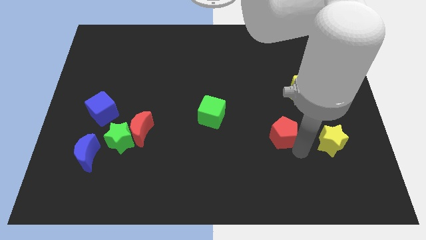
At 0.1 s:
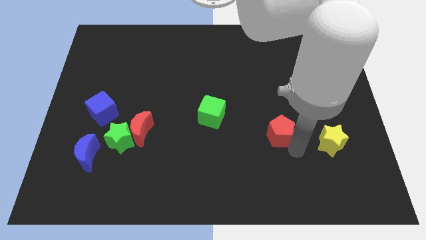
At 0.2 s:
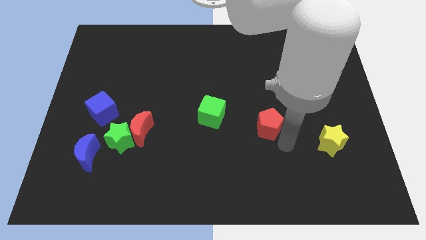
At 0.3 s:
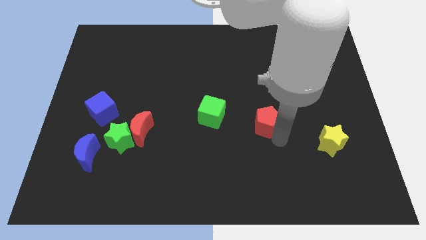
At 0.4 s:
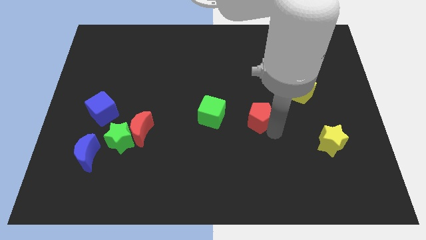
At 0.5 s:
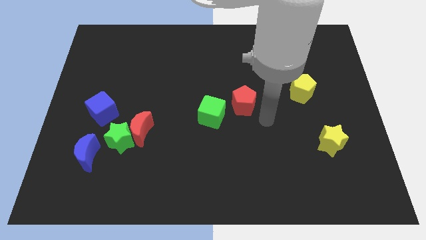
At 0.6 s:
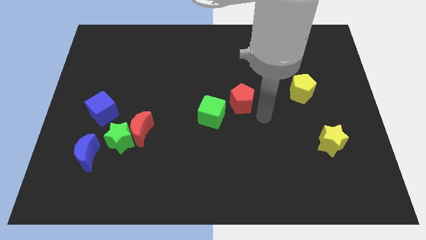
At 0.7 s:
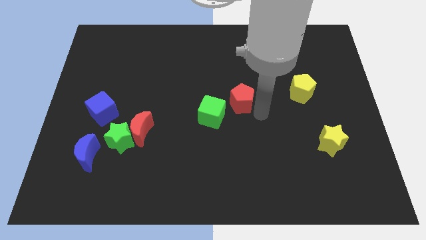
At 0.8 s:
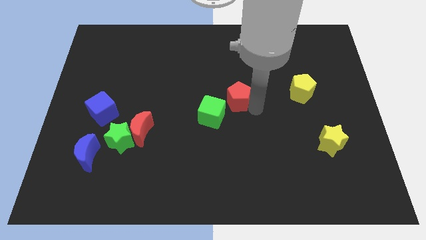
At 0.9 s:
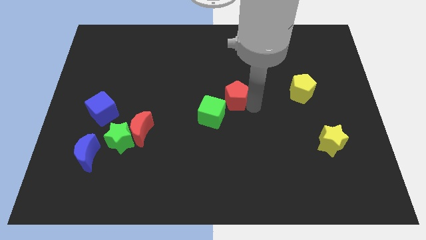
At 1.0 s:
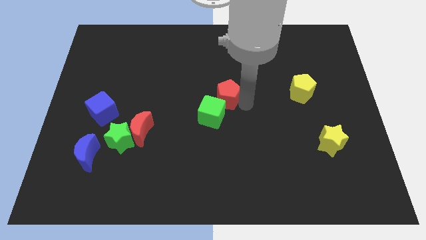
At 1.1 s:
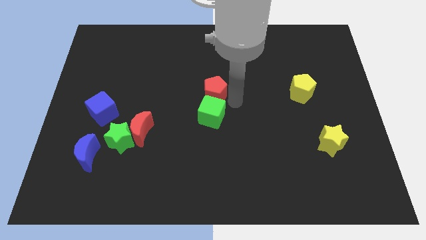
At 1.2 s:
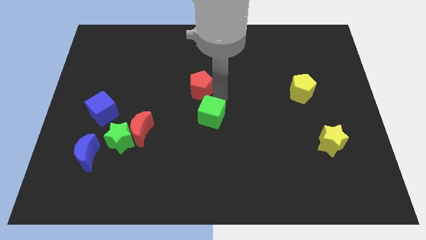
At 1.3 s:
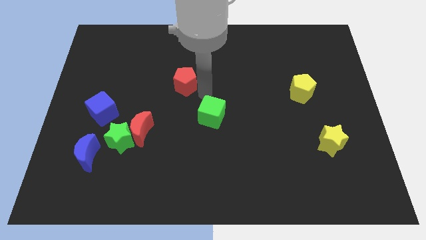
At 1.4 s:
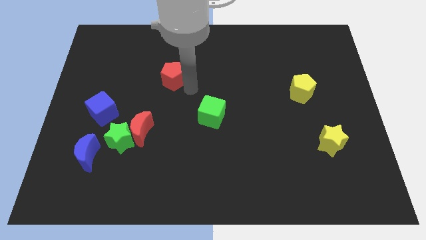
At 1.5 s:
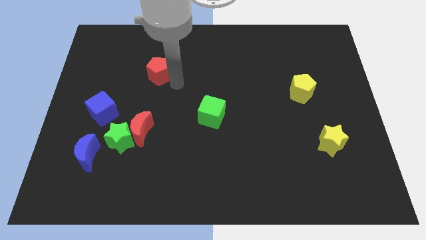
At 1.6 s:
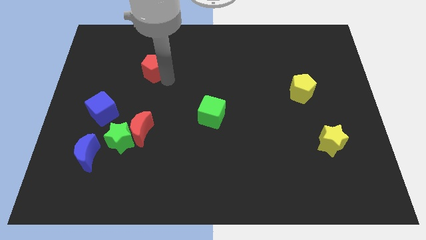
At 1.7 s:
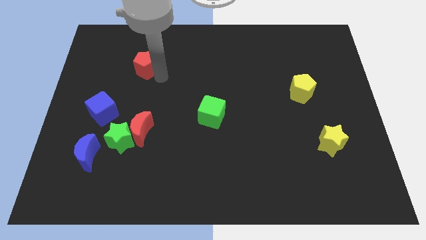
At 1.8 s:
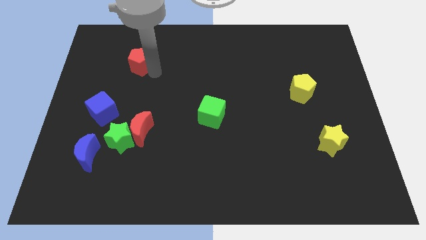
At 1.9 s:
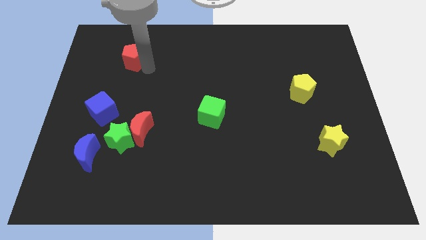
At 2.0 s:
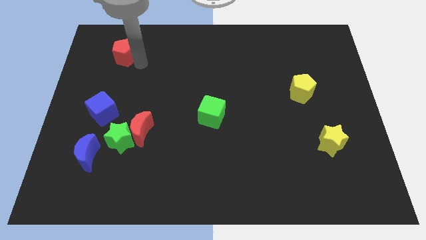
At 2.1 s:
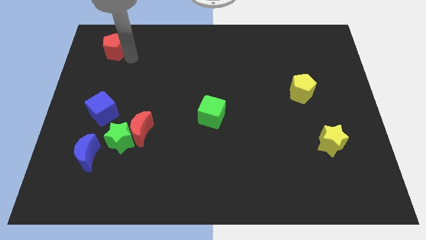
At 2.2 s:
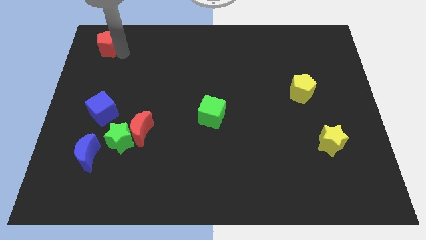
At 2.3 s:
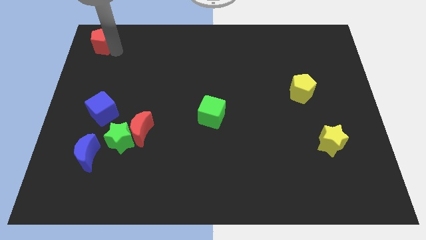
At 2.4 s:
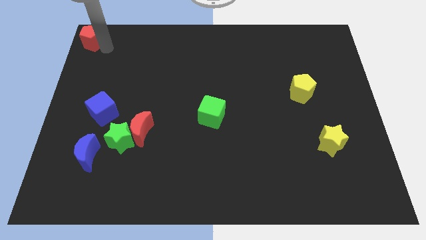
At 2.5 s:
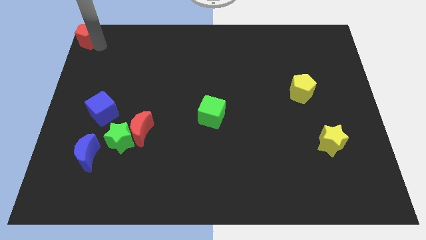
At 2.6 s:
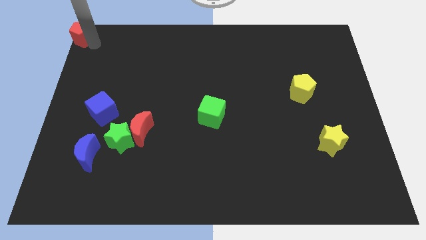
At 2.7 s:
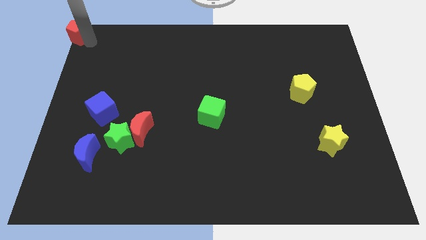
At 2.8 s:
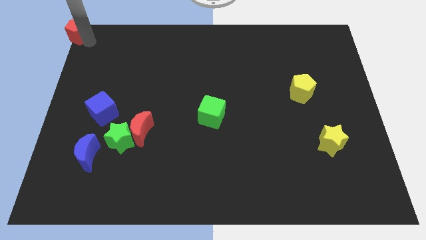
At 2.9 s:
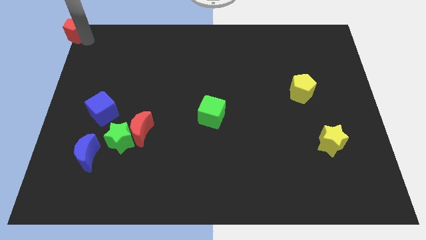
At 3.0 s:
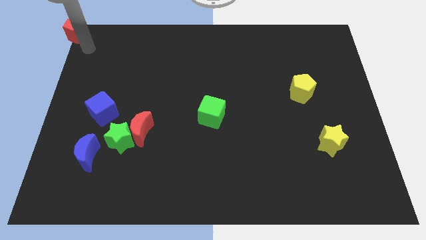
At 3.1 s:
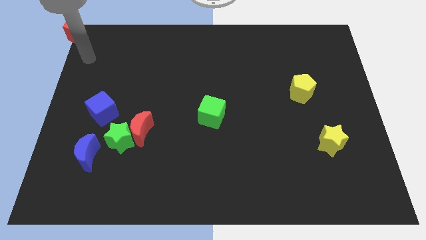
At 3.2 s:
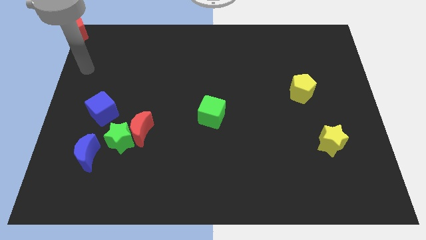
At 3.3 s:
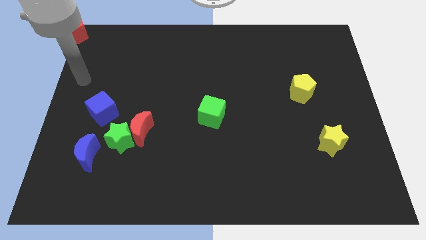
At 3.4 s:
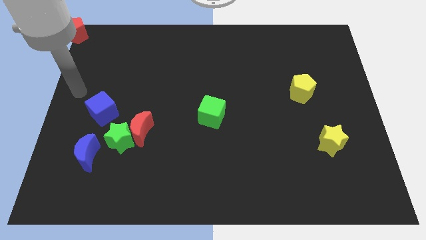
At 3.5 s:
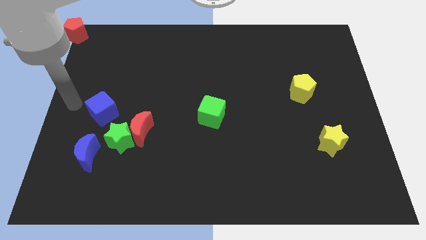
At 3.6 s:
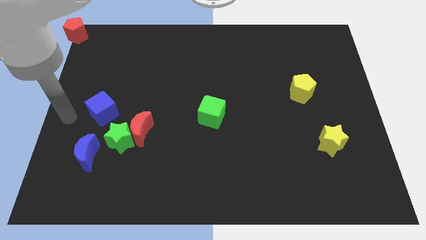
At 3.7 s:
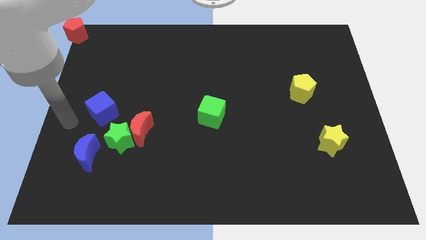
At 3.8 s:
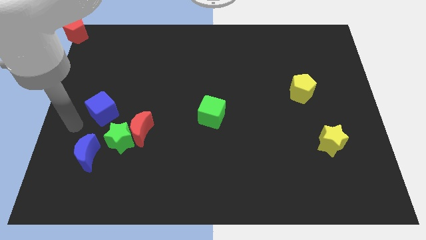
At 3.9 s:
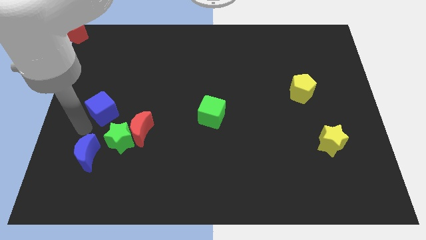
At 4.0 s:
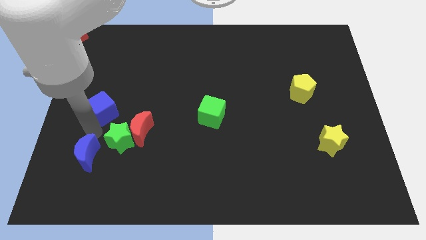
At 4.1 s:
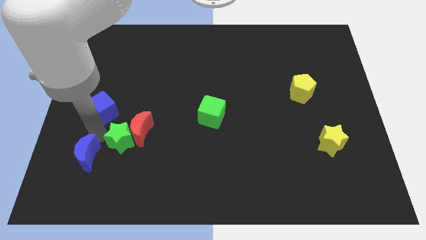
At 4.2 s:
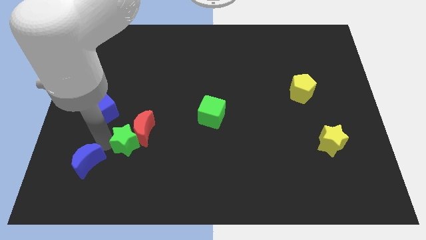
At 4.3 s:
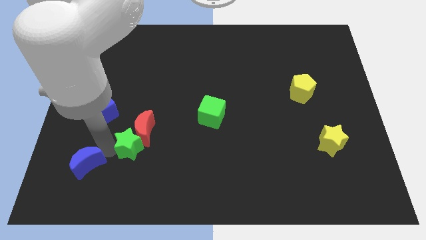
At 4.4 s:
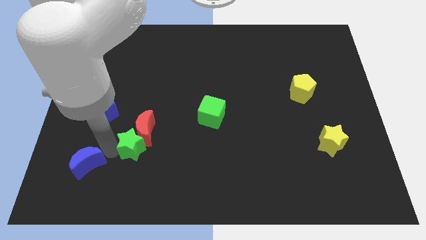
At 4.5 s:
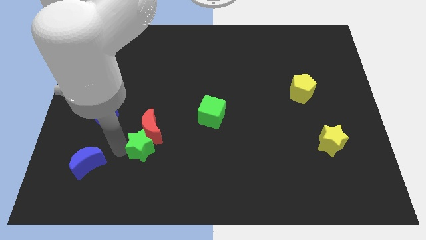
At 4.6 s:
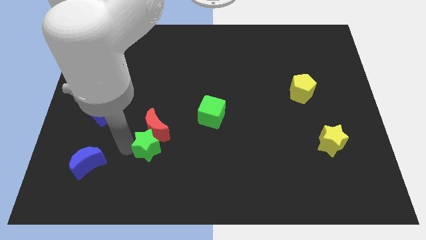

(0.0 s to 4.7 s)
slightly touch the blue moon down

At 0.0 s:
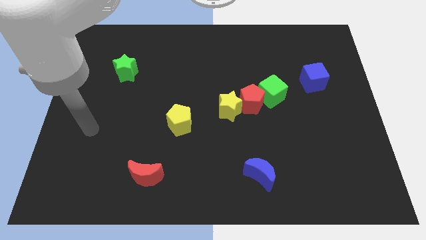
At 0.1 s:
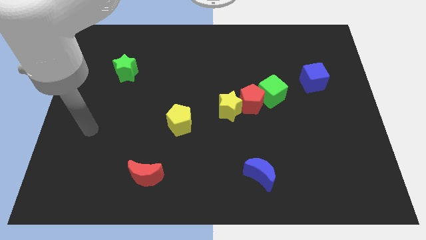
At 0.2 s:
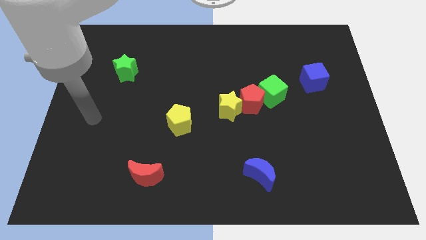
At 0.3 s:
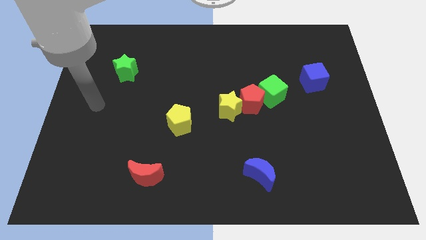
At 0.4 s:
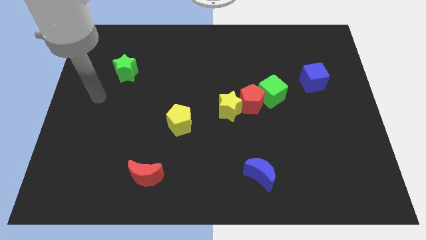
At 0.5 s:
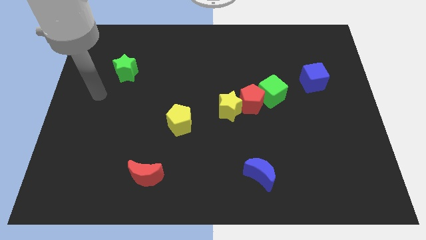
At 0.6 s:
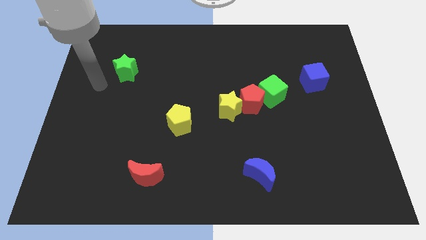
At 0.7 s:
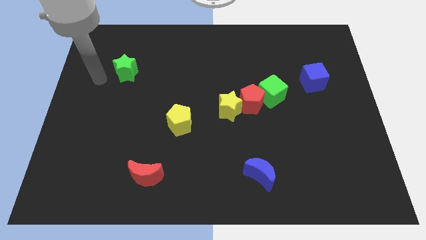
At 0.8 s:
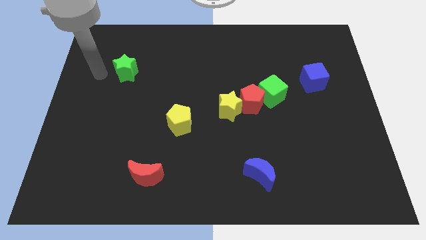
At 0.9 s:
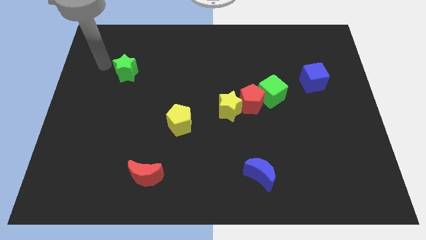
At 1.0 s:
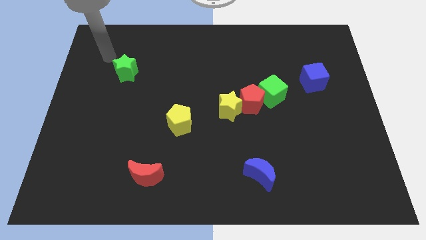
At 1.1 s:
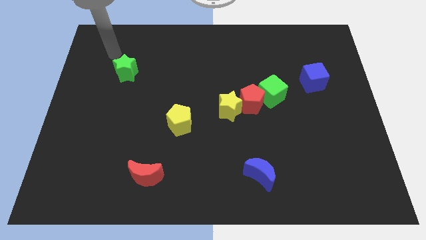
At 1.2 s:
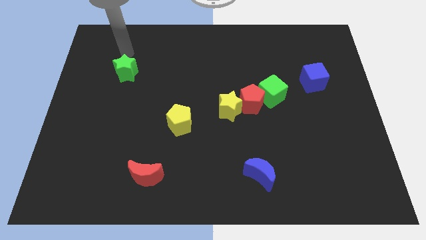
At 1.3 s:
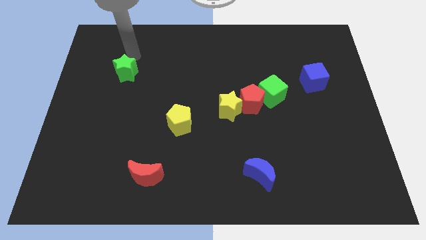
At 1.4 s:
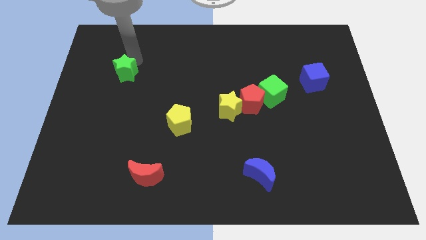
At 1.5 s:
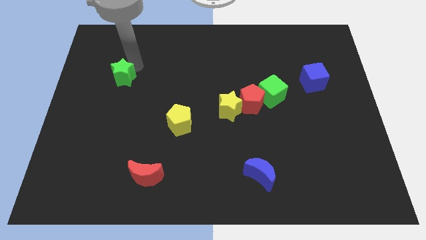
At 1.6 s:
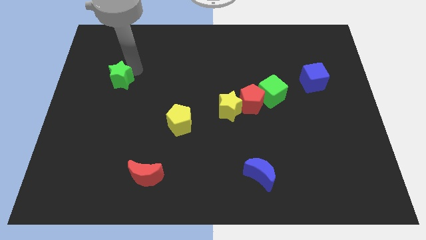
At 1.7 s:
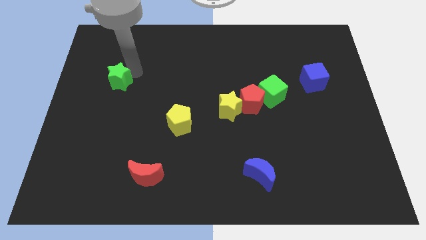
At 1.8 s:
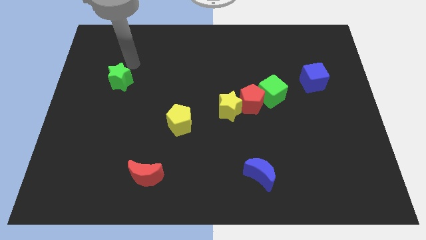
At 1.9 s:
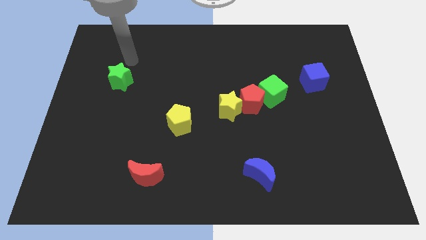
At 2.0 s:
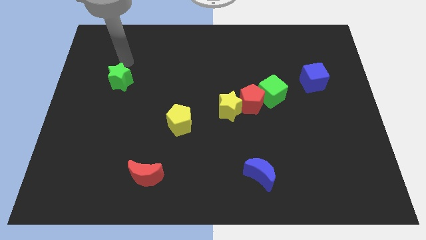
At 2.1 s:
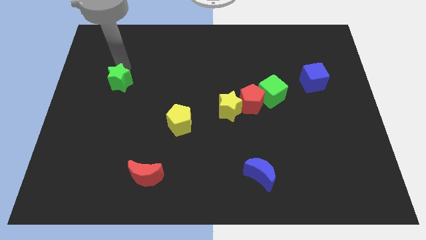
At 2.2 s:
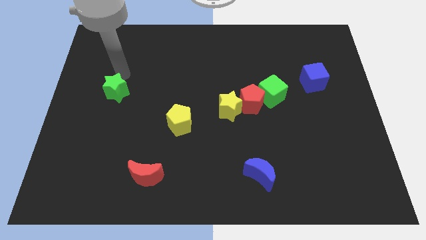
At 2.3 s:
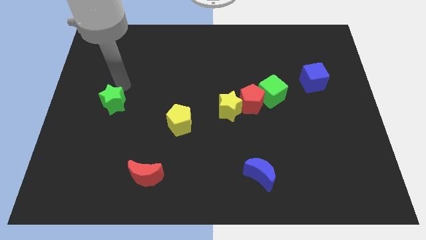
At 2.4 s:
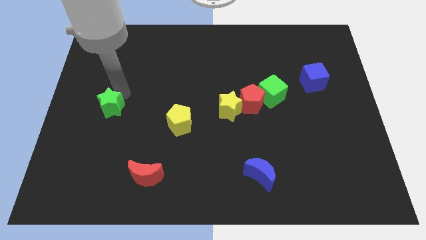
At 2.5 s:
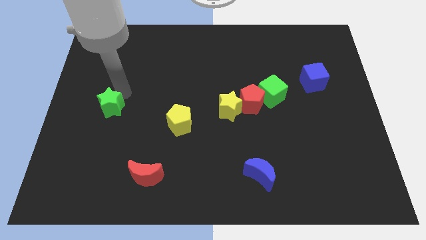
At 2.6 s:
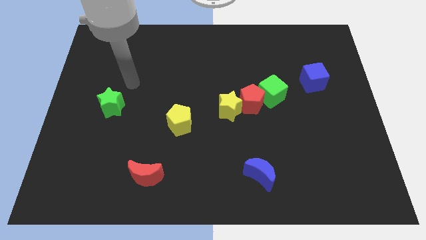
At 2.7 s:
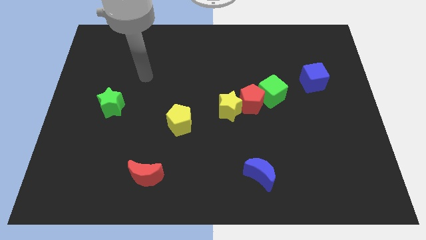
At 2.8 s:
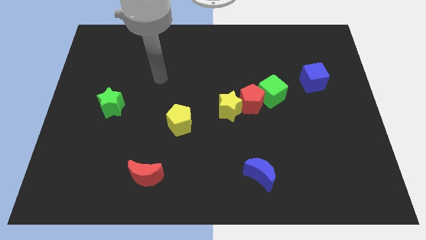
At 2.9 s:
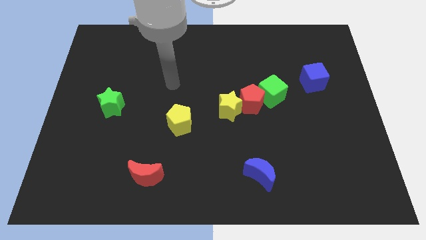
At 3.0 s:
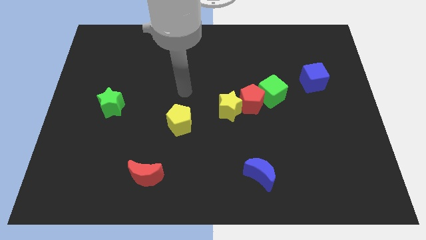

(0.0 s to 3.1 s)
move the green star slightly towards down

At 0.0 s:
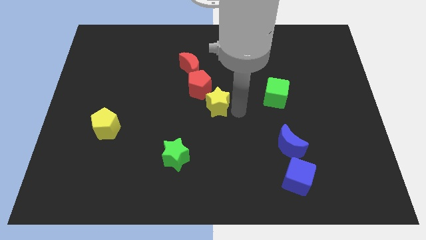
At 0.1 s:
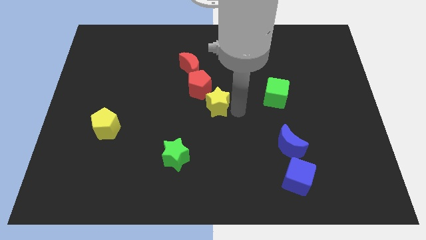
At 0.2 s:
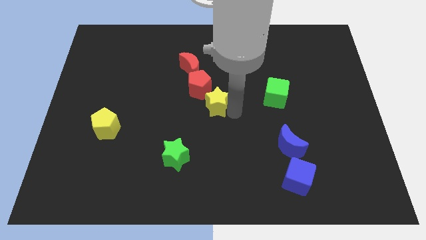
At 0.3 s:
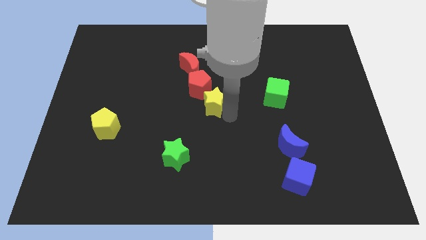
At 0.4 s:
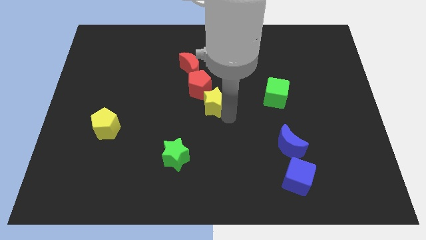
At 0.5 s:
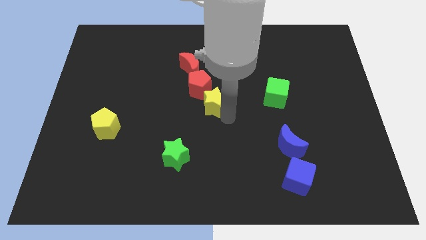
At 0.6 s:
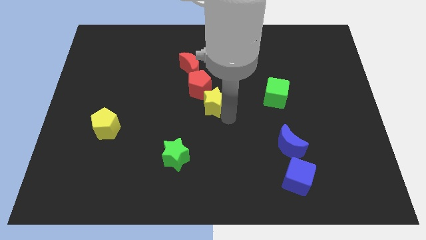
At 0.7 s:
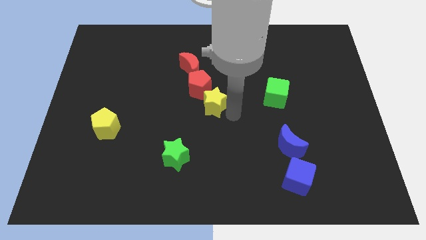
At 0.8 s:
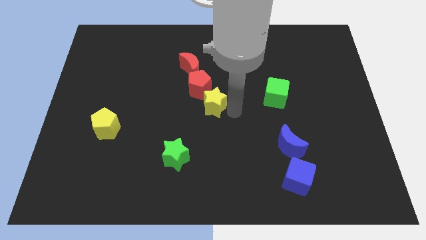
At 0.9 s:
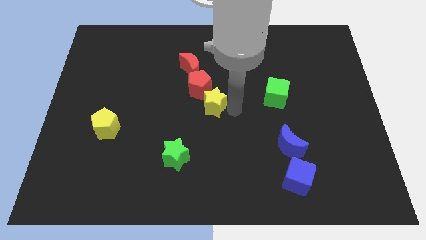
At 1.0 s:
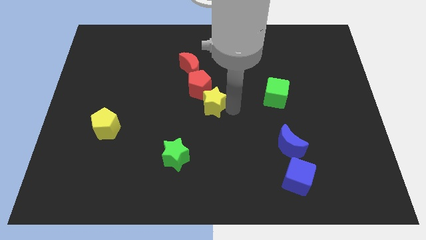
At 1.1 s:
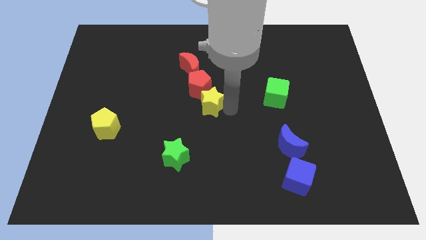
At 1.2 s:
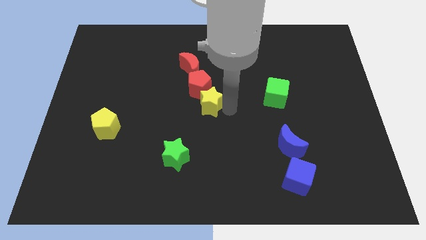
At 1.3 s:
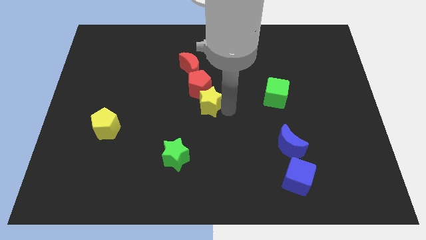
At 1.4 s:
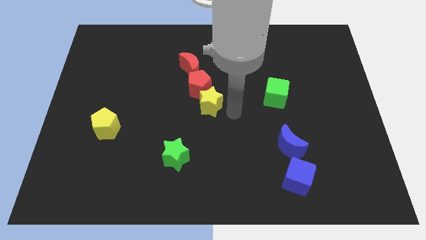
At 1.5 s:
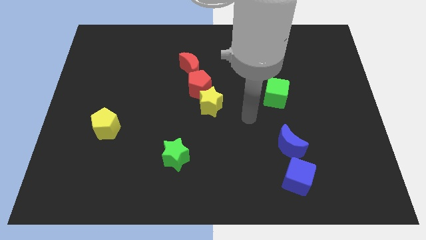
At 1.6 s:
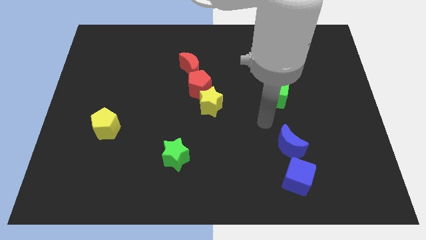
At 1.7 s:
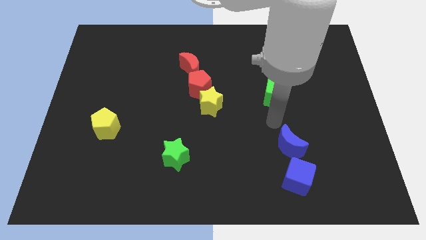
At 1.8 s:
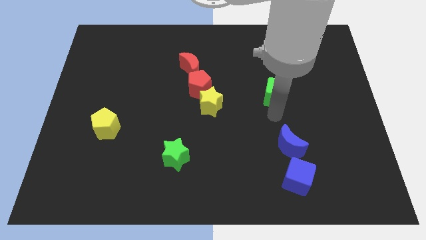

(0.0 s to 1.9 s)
place yellow star towards the red pentagon
